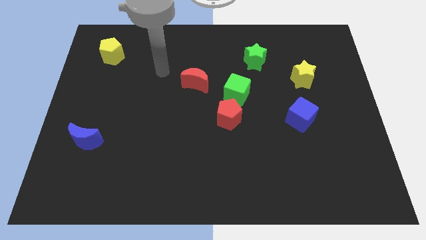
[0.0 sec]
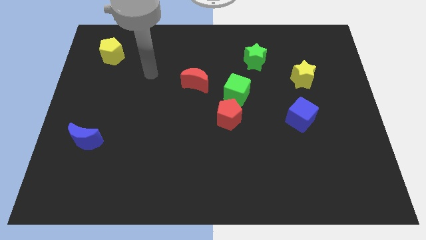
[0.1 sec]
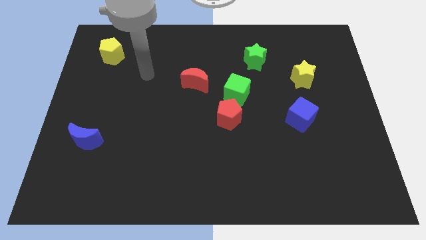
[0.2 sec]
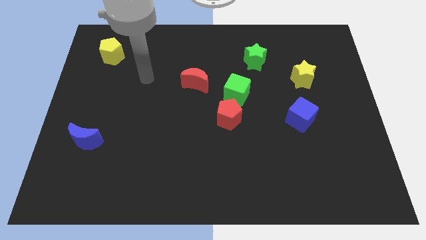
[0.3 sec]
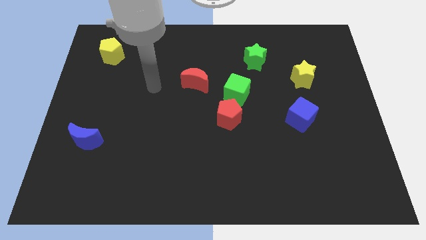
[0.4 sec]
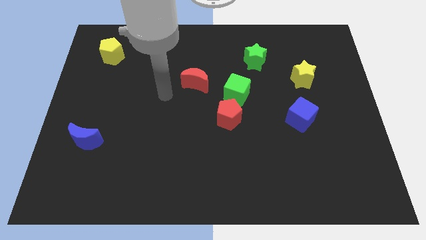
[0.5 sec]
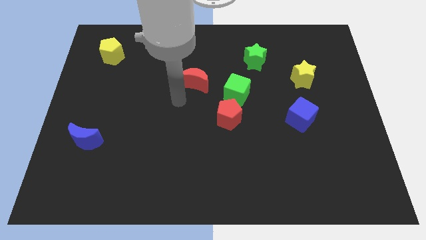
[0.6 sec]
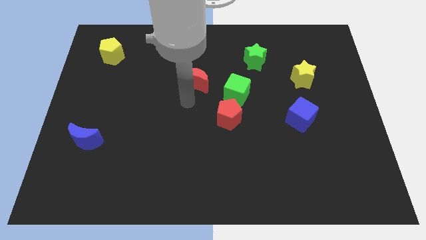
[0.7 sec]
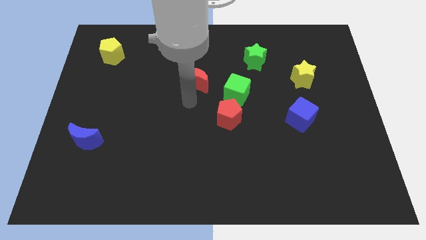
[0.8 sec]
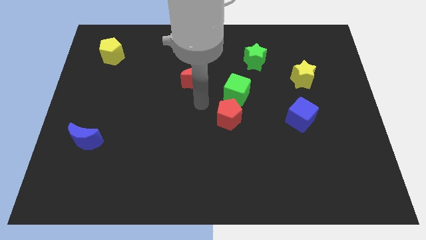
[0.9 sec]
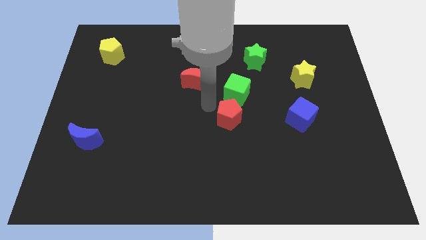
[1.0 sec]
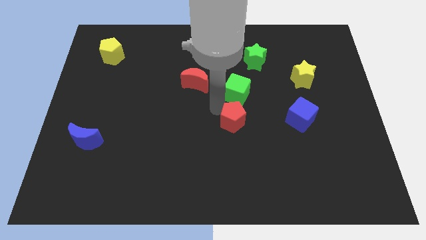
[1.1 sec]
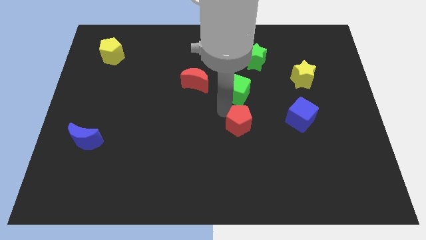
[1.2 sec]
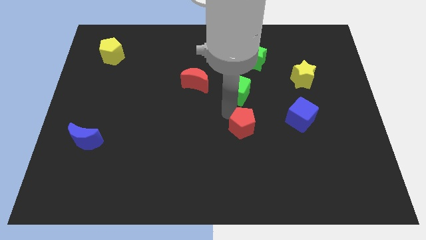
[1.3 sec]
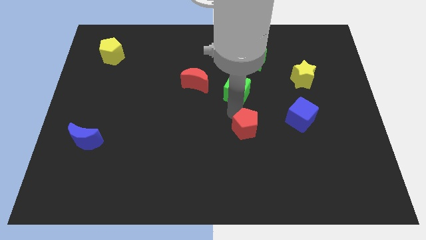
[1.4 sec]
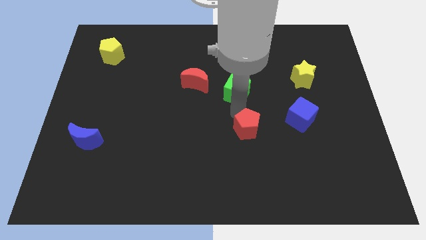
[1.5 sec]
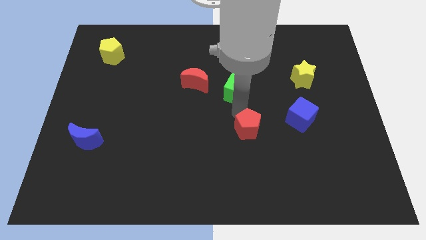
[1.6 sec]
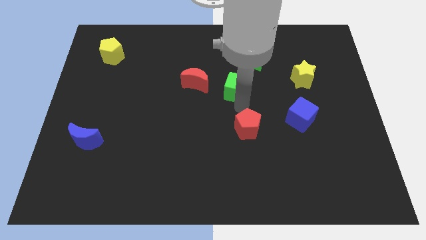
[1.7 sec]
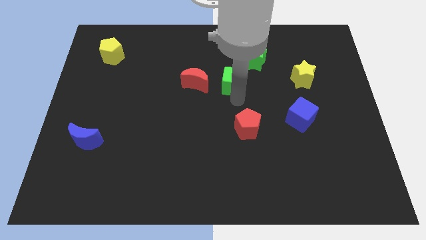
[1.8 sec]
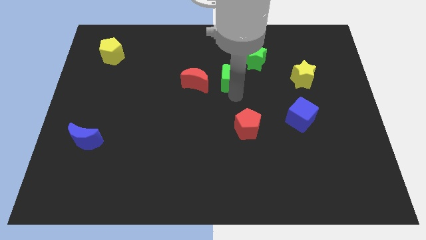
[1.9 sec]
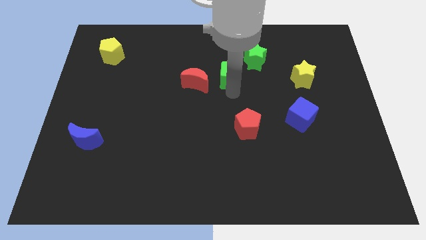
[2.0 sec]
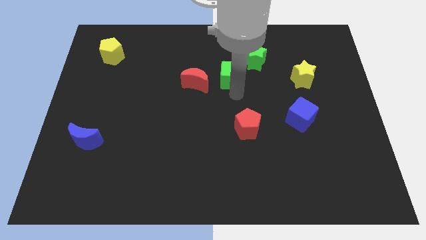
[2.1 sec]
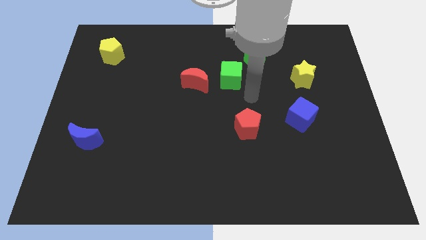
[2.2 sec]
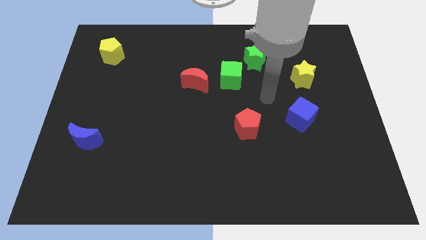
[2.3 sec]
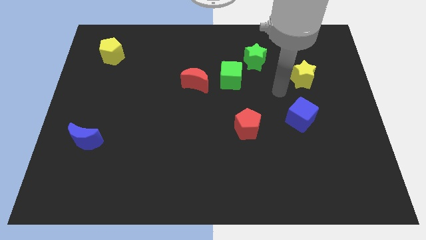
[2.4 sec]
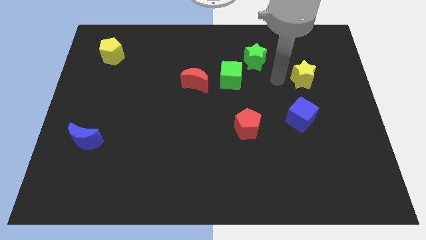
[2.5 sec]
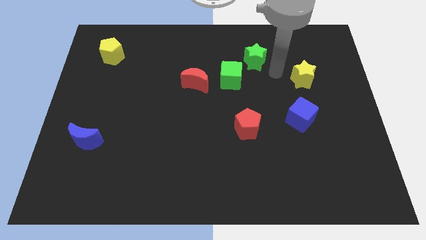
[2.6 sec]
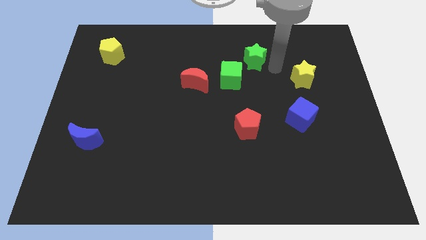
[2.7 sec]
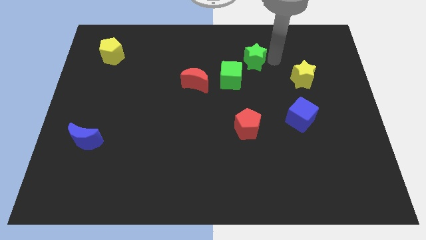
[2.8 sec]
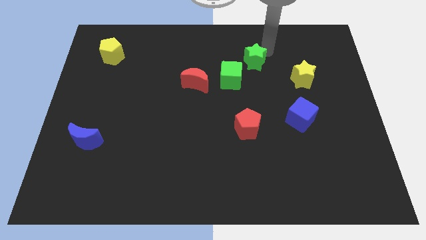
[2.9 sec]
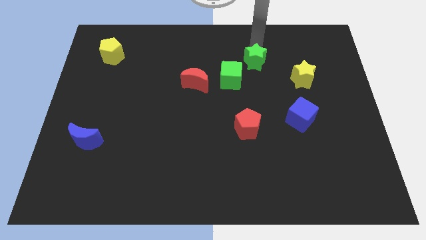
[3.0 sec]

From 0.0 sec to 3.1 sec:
separate the red pentagon and the green cube

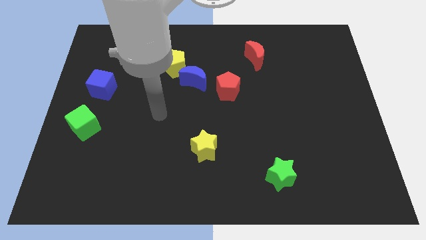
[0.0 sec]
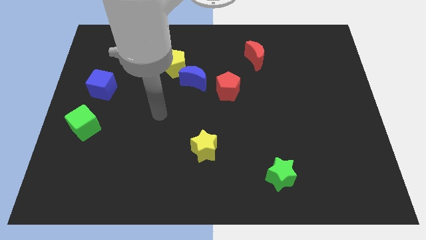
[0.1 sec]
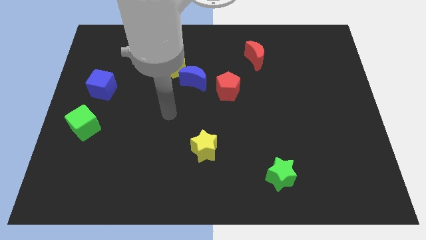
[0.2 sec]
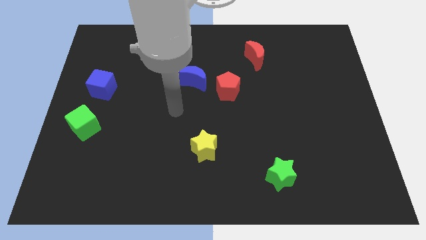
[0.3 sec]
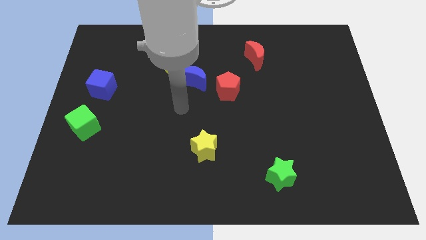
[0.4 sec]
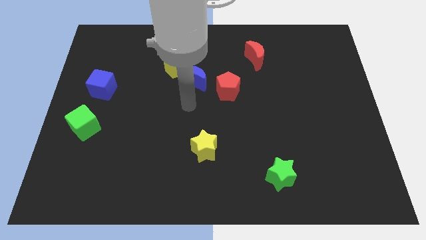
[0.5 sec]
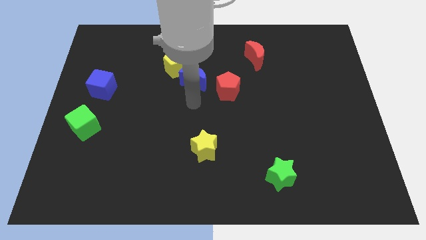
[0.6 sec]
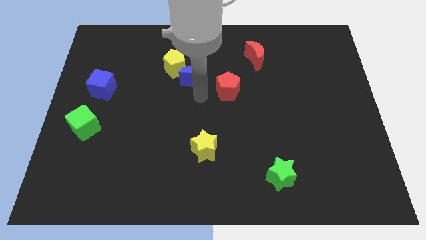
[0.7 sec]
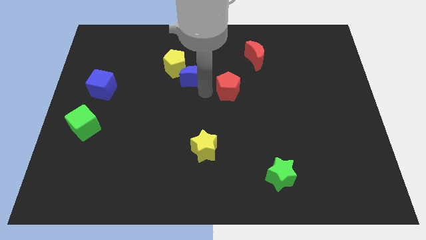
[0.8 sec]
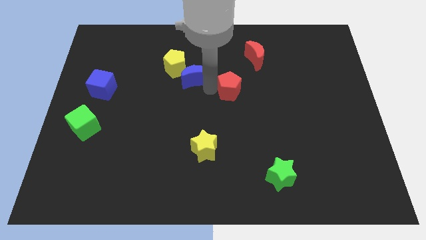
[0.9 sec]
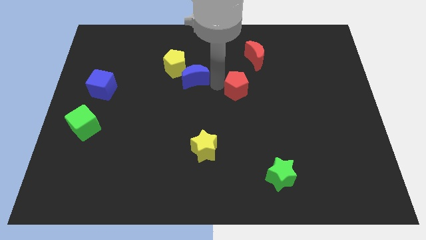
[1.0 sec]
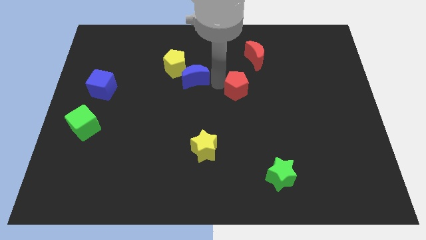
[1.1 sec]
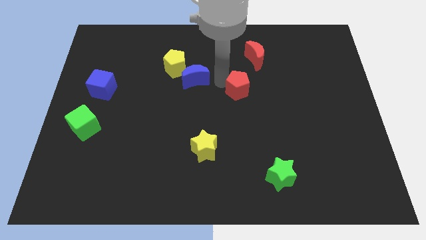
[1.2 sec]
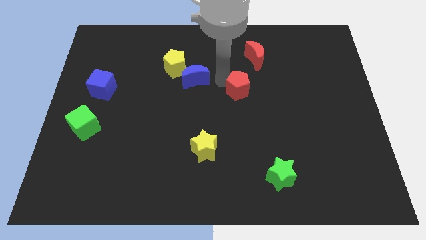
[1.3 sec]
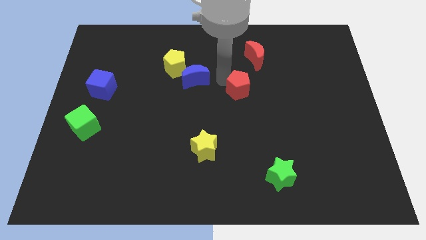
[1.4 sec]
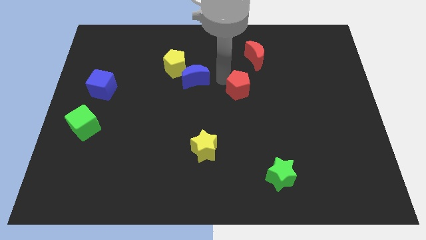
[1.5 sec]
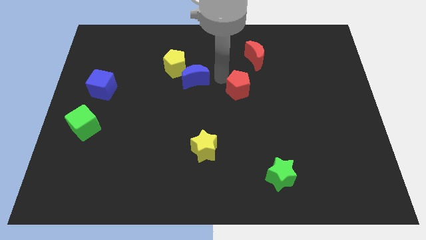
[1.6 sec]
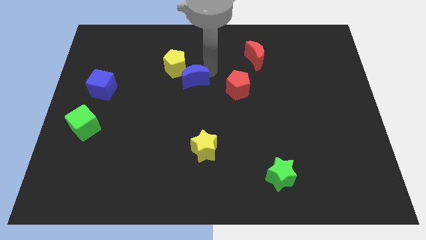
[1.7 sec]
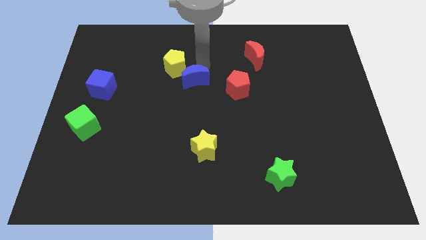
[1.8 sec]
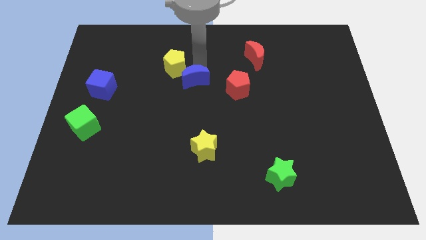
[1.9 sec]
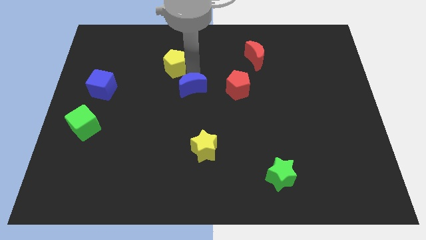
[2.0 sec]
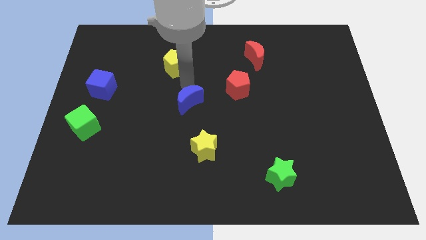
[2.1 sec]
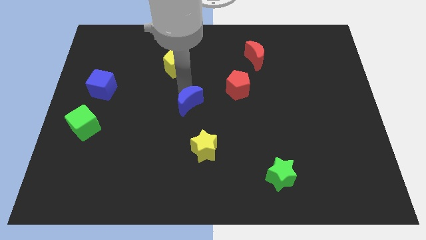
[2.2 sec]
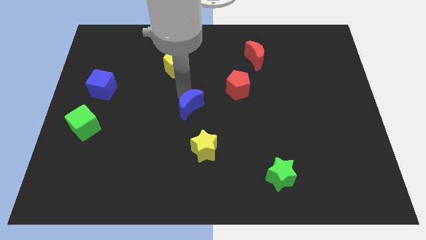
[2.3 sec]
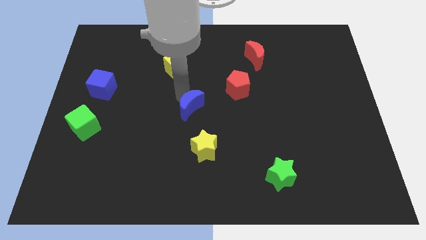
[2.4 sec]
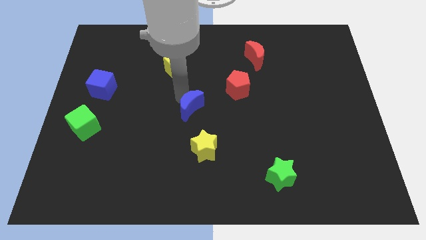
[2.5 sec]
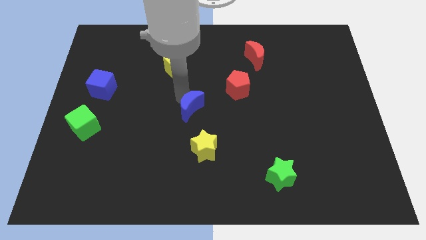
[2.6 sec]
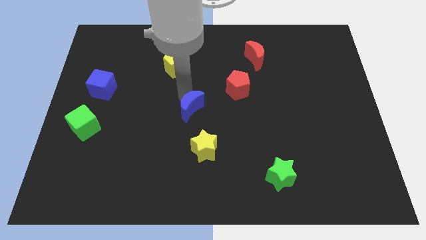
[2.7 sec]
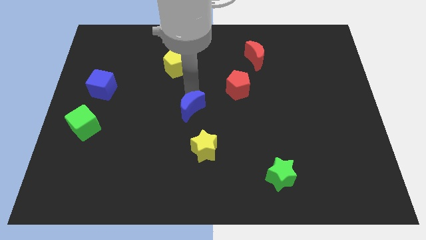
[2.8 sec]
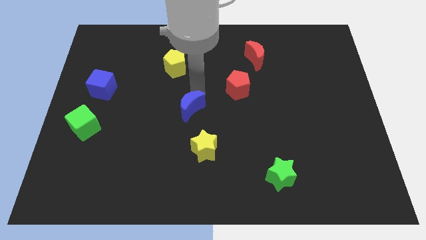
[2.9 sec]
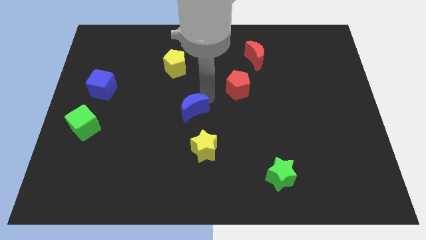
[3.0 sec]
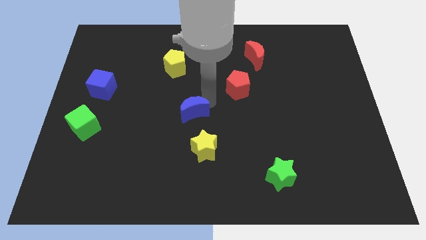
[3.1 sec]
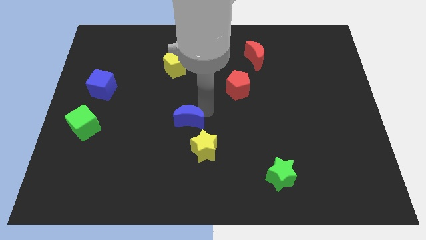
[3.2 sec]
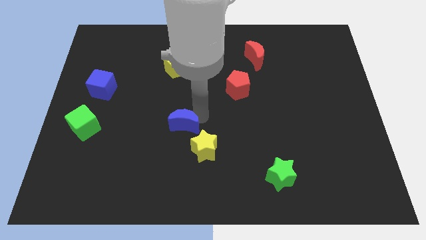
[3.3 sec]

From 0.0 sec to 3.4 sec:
place the blue crescent to the right of the green cube

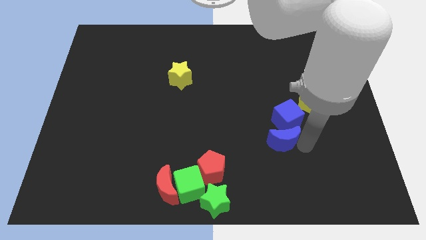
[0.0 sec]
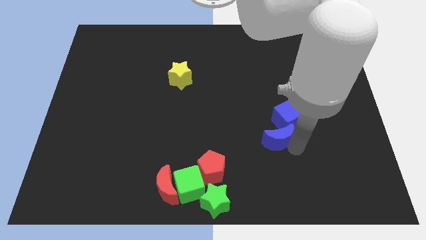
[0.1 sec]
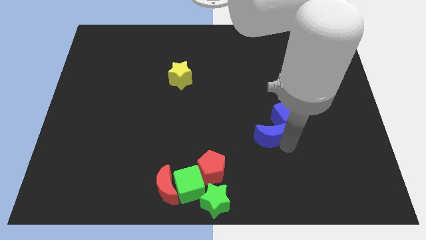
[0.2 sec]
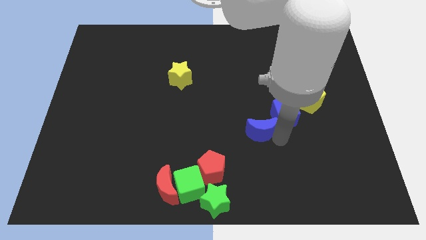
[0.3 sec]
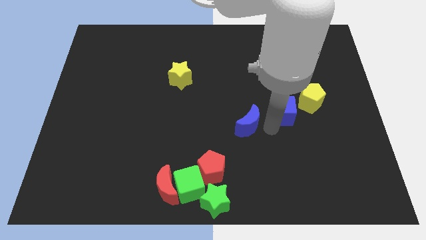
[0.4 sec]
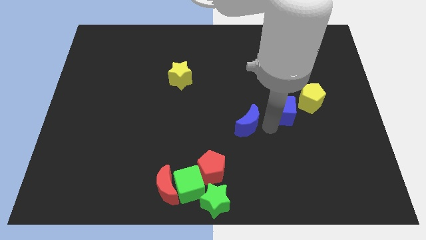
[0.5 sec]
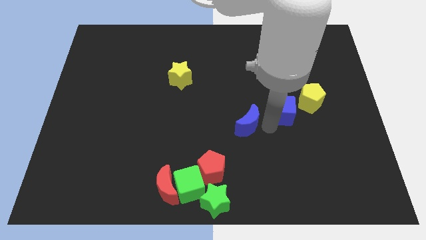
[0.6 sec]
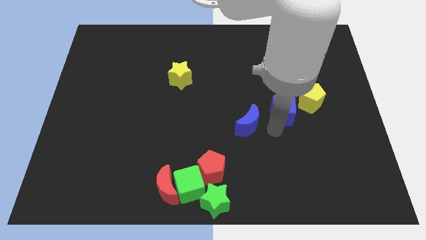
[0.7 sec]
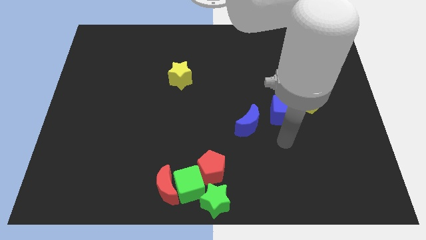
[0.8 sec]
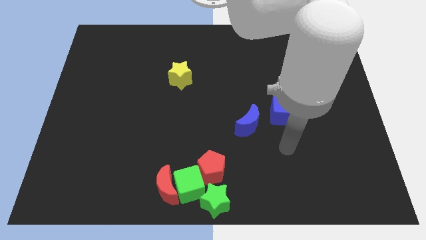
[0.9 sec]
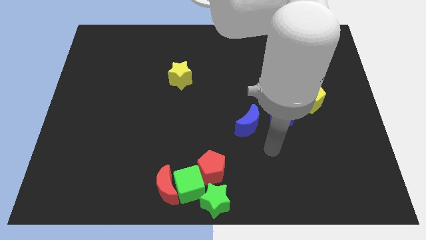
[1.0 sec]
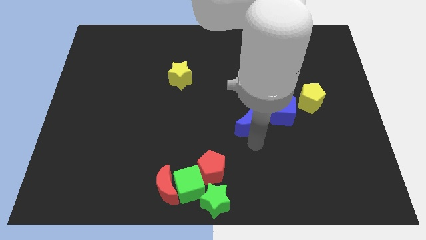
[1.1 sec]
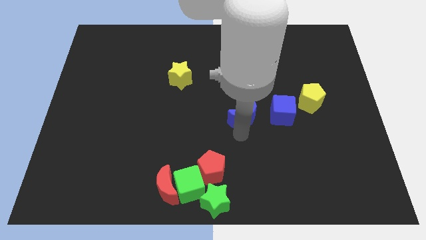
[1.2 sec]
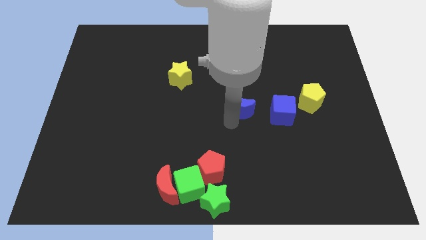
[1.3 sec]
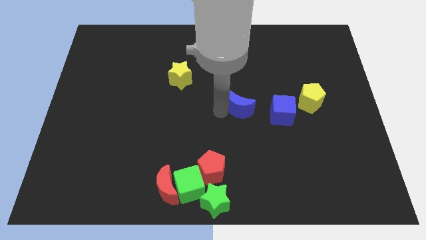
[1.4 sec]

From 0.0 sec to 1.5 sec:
move the blue crescent to the left of the blue cube

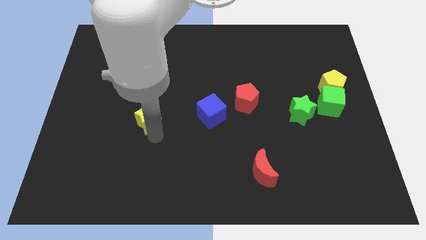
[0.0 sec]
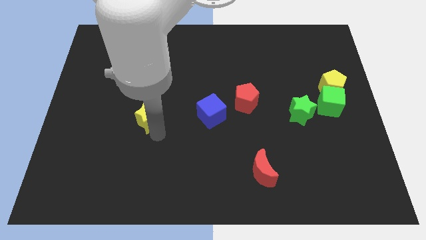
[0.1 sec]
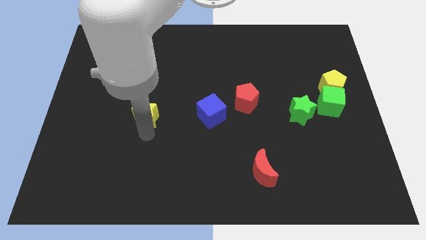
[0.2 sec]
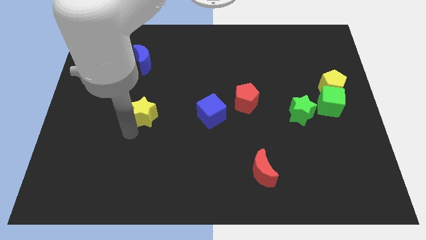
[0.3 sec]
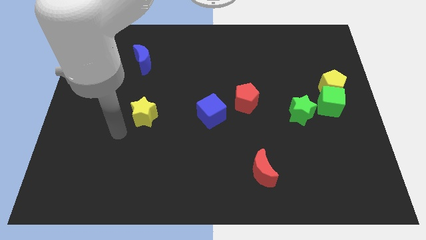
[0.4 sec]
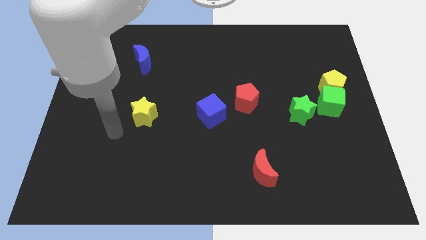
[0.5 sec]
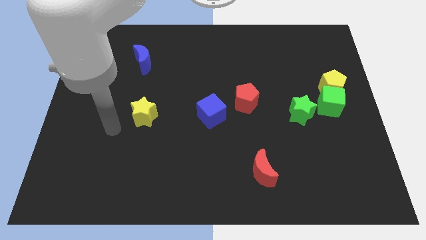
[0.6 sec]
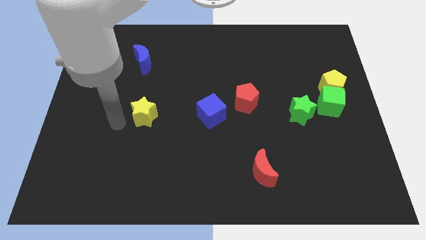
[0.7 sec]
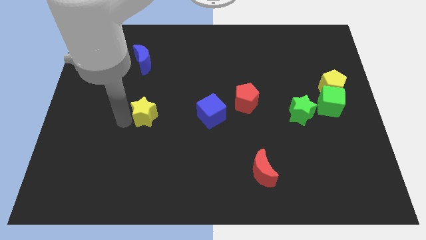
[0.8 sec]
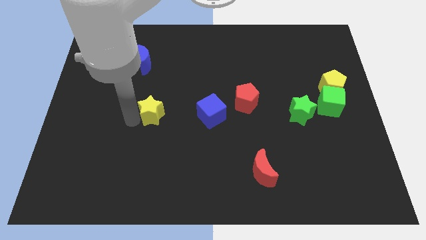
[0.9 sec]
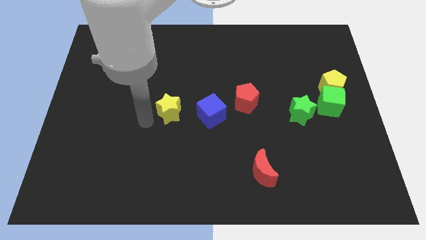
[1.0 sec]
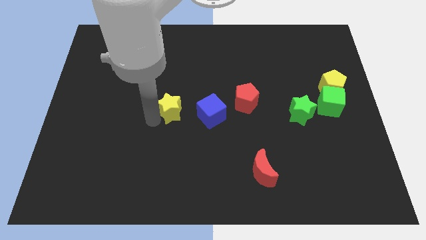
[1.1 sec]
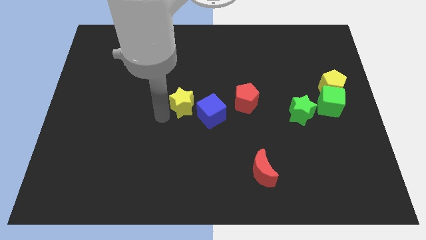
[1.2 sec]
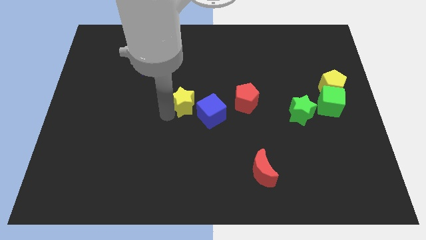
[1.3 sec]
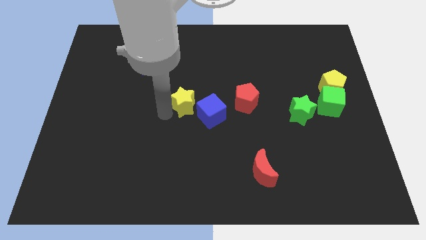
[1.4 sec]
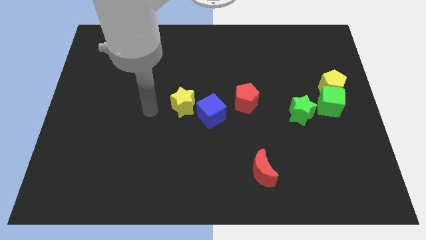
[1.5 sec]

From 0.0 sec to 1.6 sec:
push the yellow star close to the blue cube
